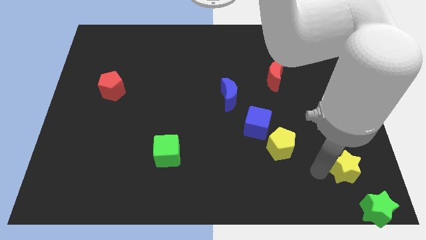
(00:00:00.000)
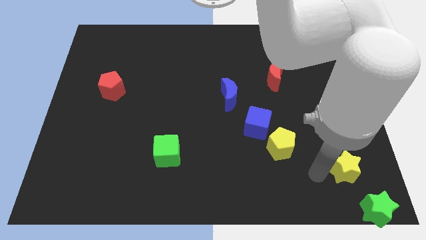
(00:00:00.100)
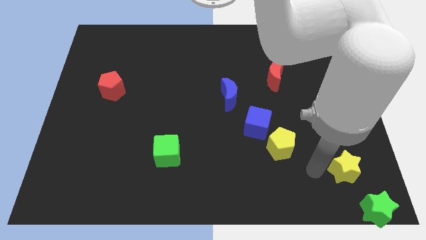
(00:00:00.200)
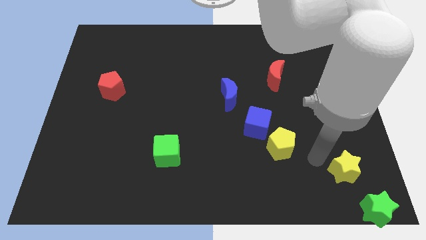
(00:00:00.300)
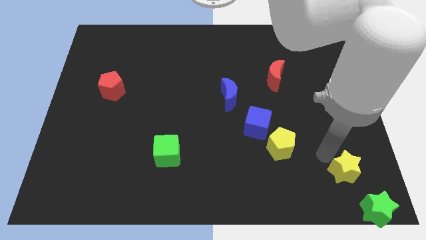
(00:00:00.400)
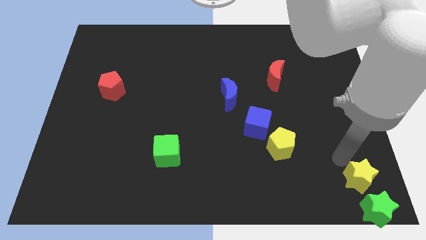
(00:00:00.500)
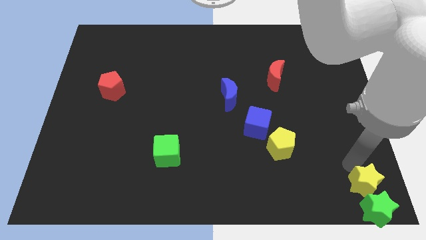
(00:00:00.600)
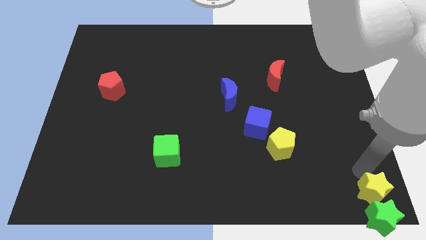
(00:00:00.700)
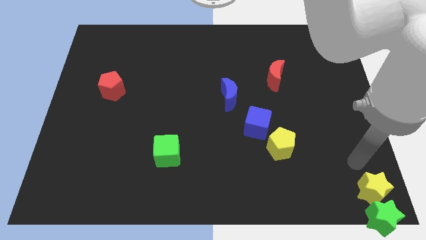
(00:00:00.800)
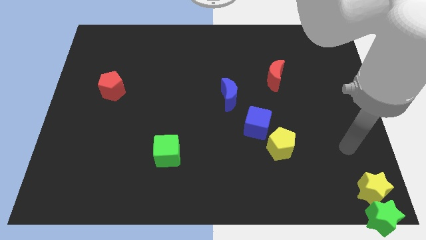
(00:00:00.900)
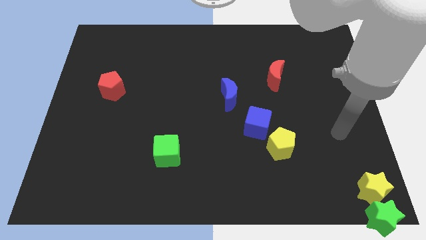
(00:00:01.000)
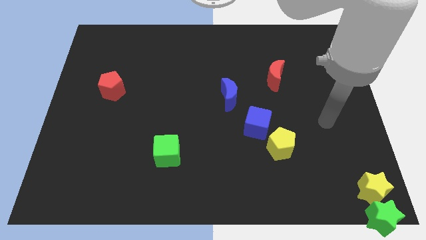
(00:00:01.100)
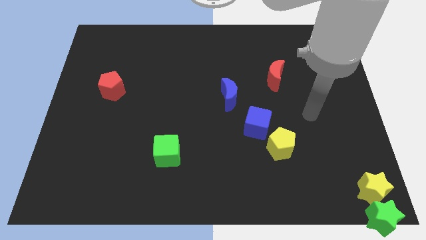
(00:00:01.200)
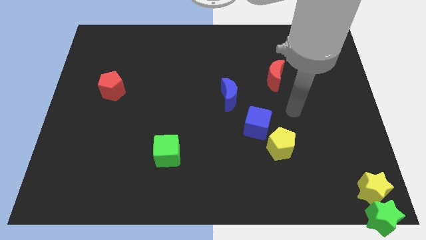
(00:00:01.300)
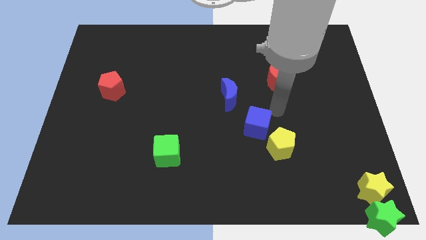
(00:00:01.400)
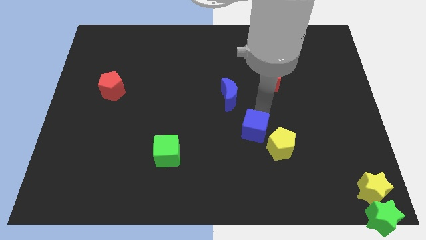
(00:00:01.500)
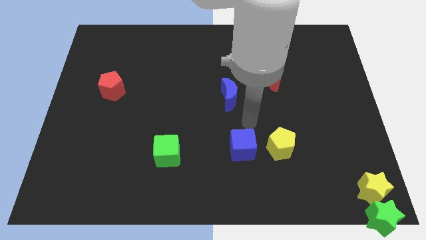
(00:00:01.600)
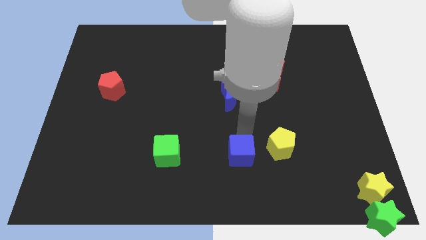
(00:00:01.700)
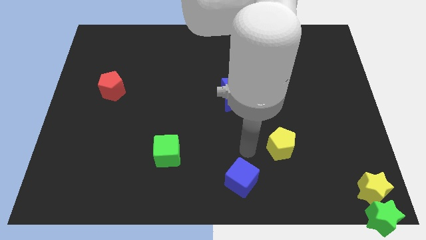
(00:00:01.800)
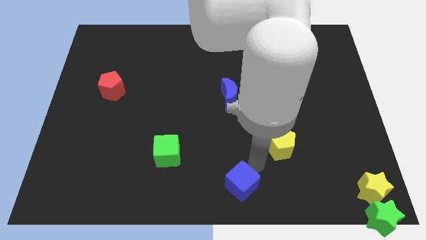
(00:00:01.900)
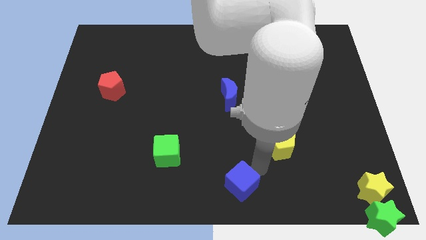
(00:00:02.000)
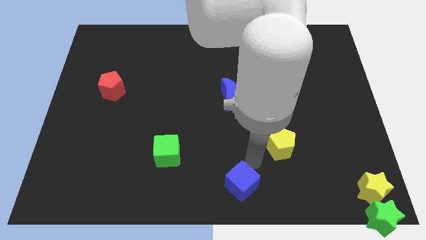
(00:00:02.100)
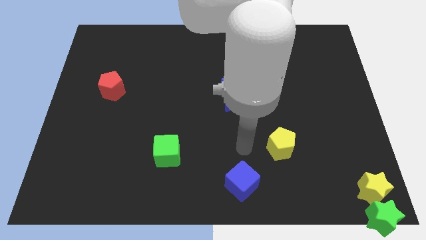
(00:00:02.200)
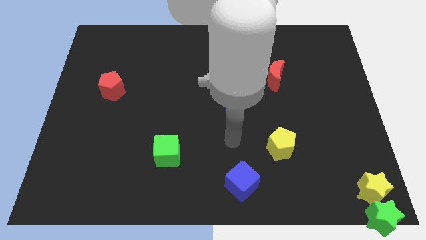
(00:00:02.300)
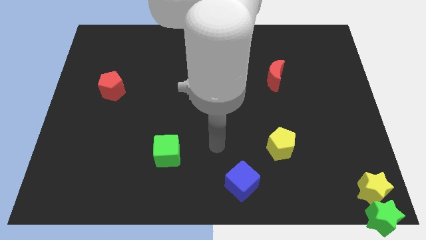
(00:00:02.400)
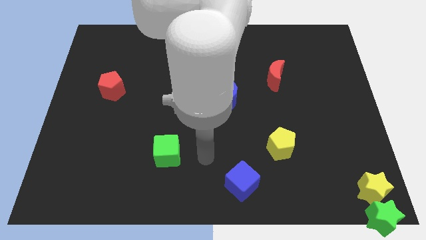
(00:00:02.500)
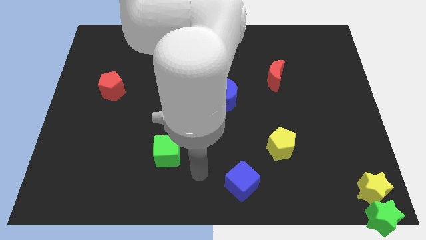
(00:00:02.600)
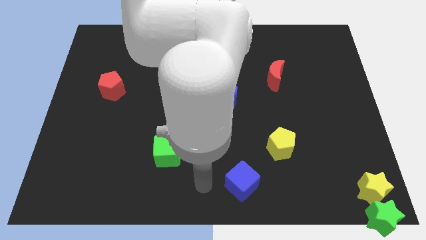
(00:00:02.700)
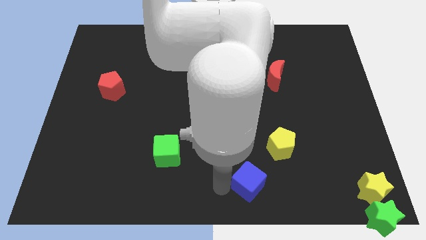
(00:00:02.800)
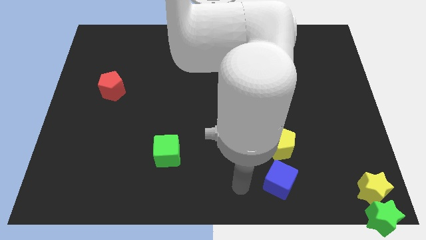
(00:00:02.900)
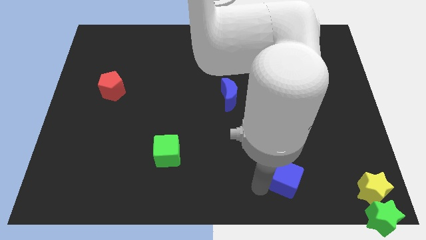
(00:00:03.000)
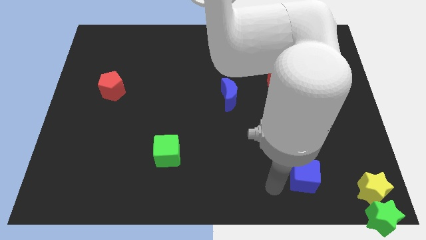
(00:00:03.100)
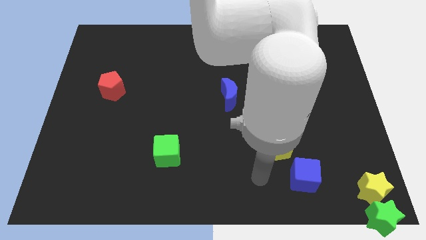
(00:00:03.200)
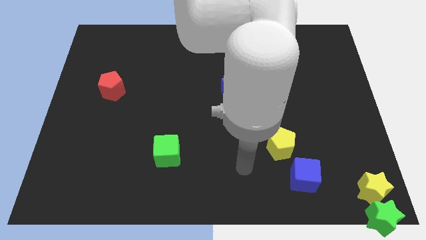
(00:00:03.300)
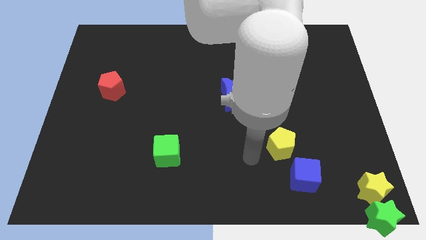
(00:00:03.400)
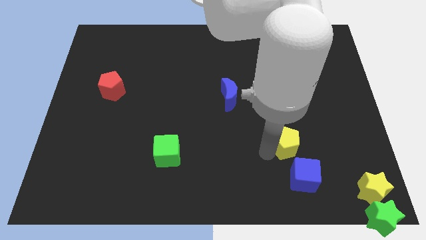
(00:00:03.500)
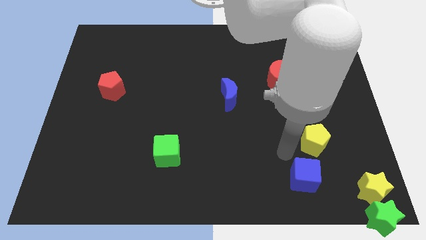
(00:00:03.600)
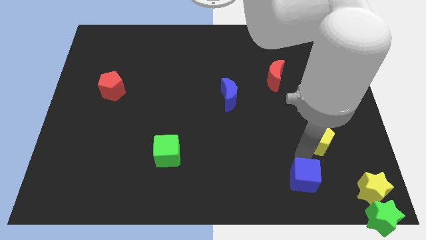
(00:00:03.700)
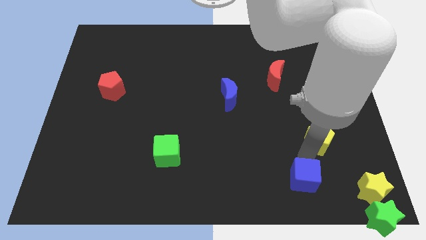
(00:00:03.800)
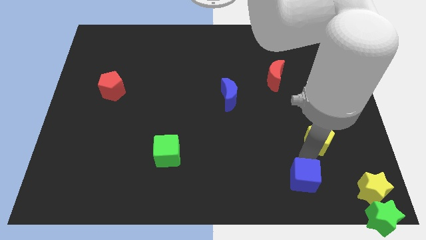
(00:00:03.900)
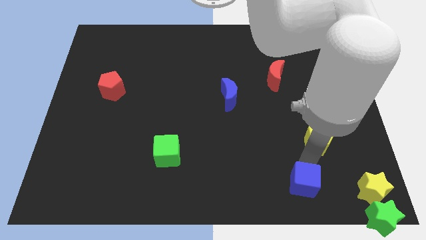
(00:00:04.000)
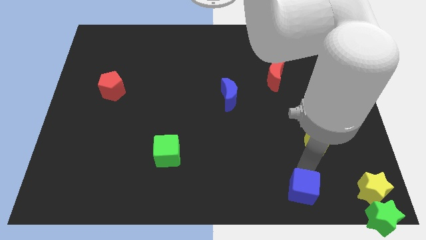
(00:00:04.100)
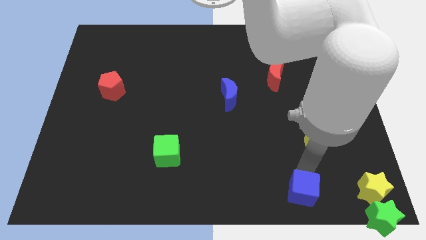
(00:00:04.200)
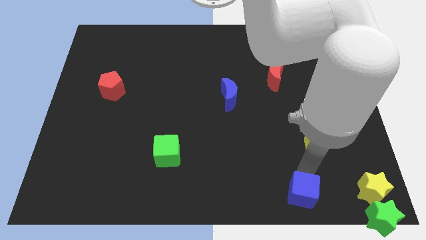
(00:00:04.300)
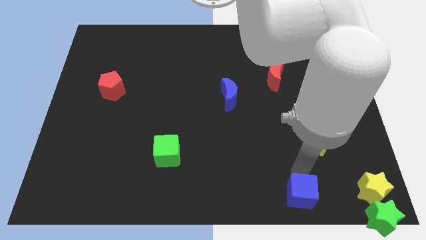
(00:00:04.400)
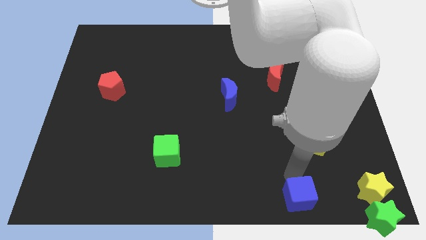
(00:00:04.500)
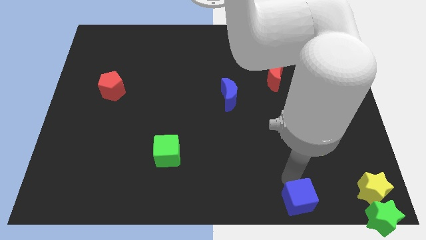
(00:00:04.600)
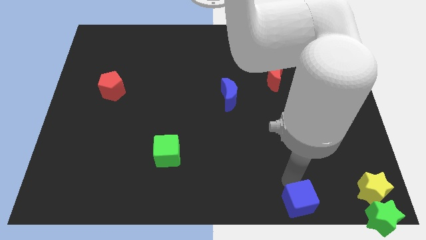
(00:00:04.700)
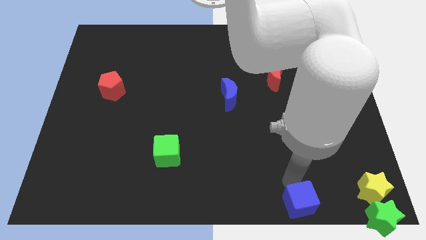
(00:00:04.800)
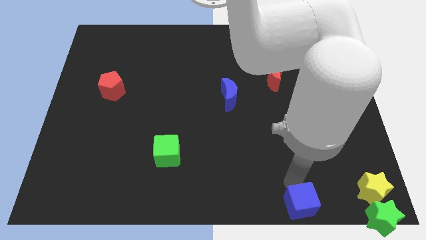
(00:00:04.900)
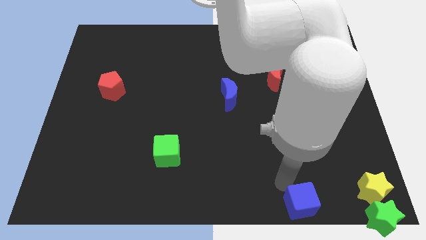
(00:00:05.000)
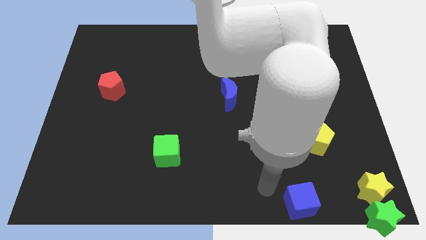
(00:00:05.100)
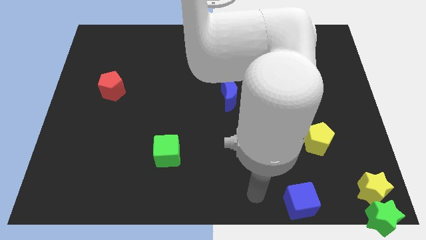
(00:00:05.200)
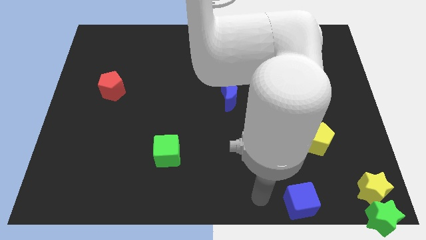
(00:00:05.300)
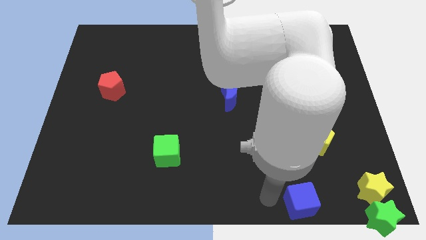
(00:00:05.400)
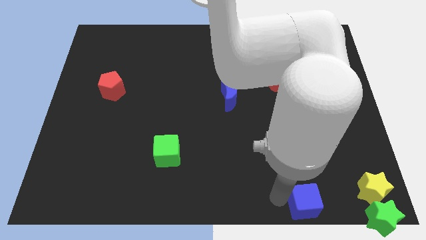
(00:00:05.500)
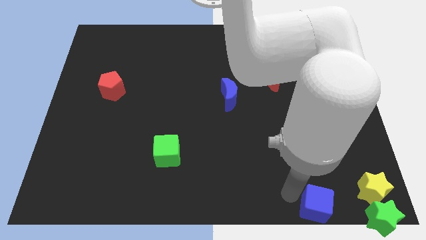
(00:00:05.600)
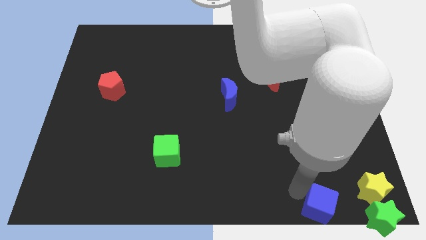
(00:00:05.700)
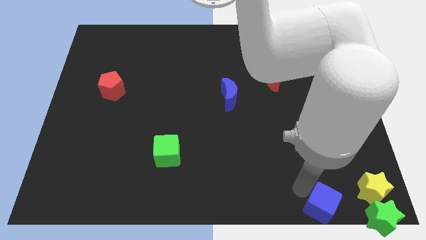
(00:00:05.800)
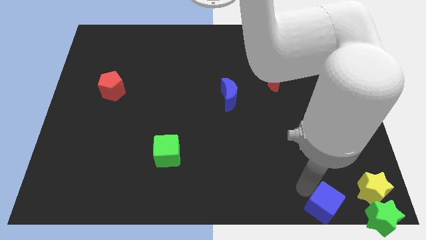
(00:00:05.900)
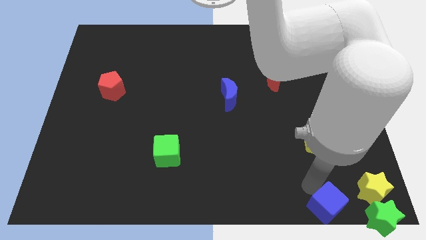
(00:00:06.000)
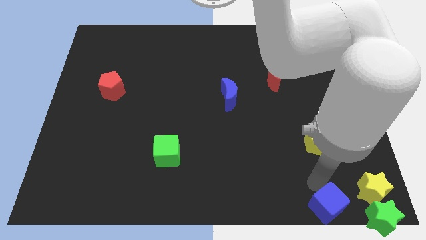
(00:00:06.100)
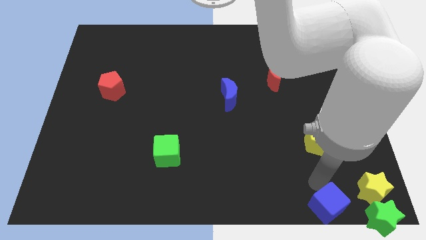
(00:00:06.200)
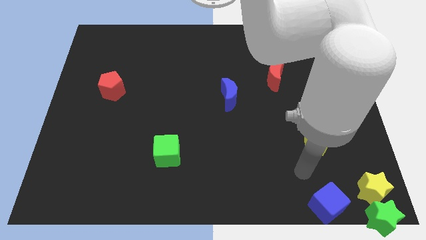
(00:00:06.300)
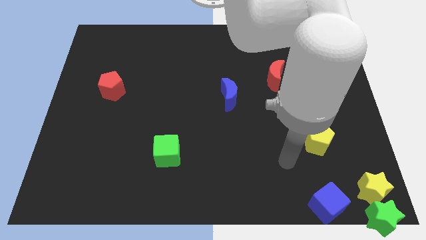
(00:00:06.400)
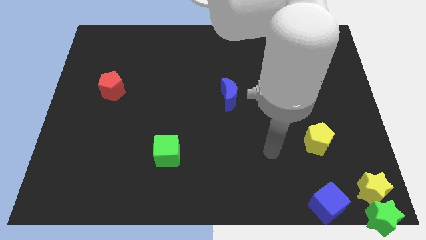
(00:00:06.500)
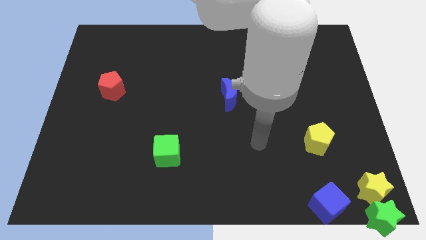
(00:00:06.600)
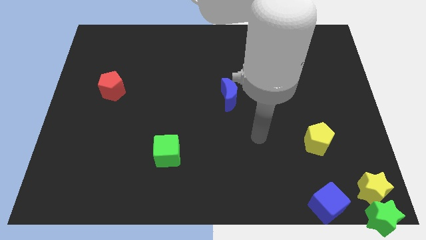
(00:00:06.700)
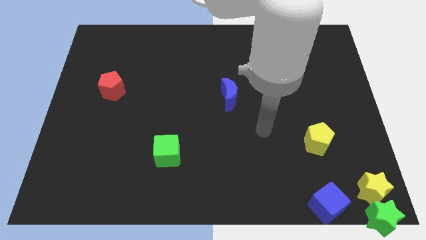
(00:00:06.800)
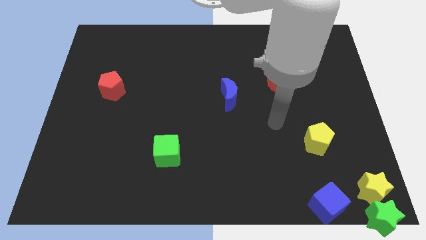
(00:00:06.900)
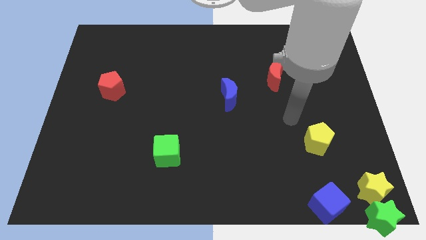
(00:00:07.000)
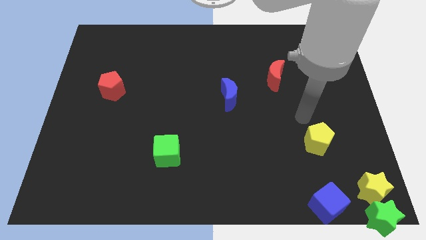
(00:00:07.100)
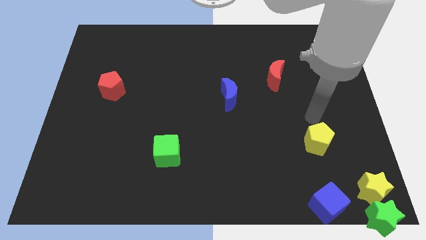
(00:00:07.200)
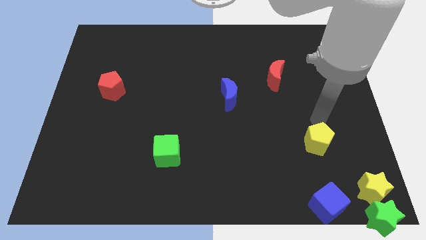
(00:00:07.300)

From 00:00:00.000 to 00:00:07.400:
push the blue cube towards bottom right side of the board

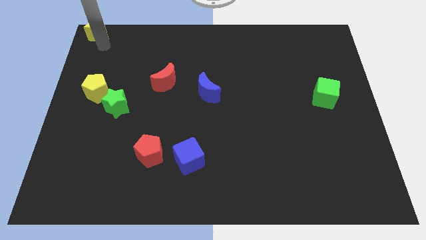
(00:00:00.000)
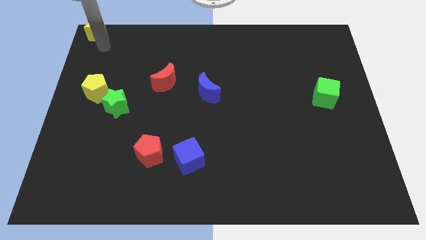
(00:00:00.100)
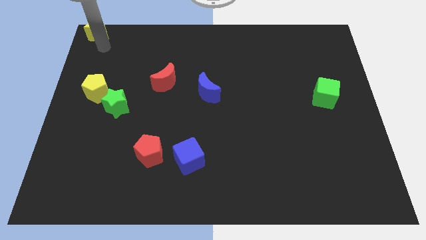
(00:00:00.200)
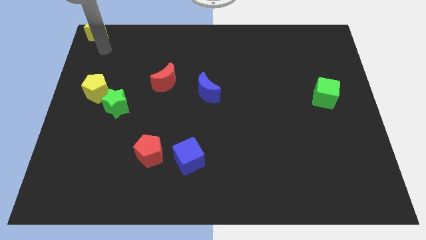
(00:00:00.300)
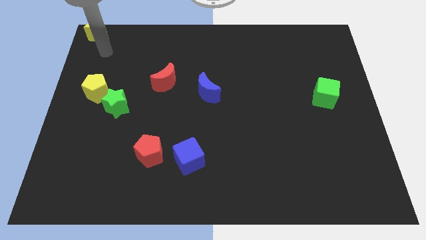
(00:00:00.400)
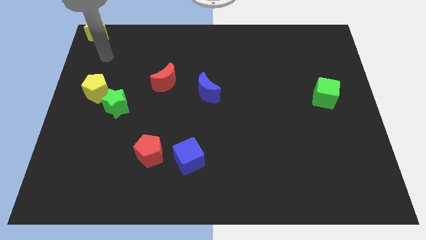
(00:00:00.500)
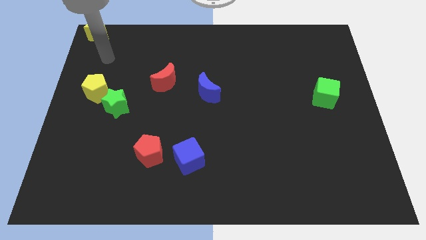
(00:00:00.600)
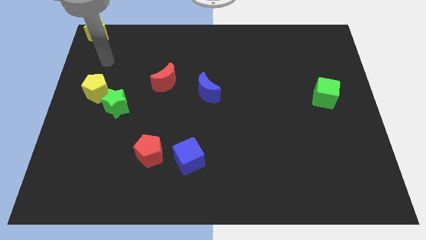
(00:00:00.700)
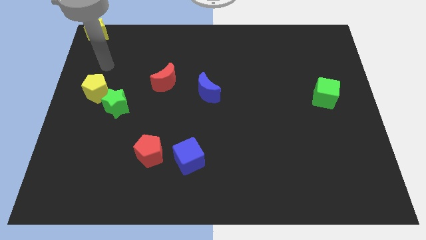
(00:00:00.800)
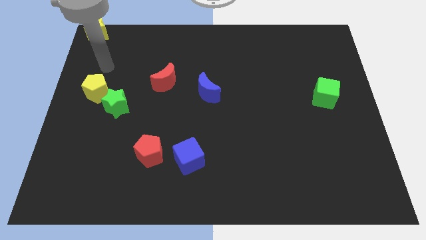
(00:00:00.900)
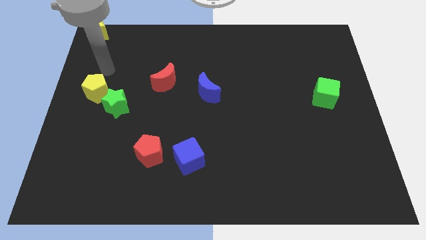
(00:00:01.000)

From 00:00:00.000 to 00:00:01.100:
move the arm away from the yellow star

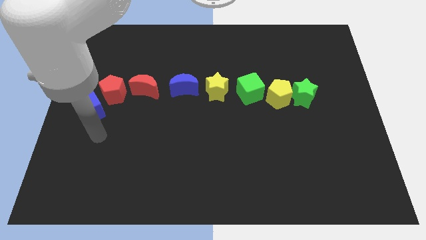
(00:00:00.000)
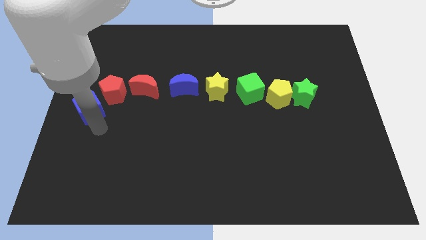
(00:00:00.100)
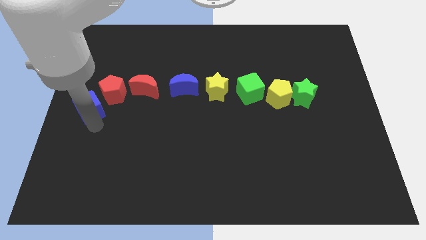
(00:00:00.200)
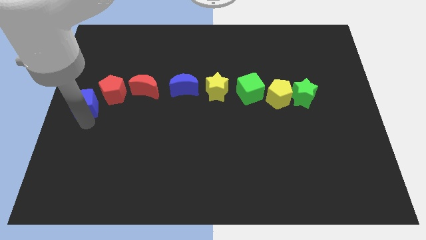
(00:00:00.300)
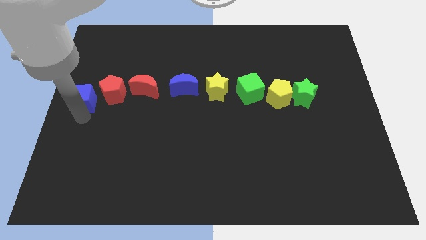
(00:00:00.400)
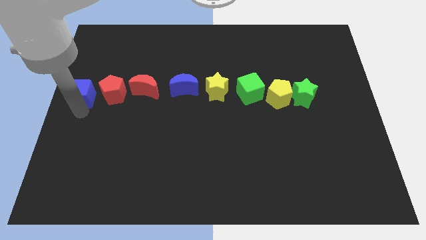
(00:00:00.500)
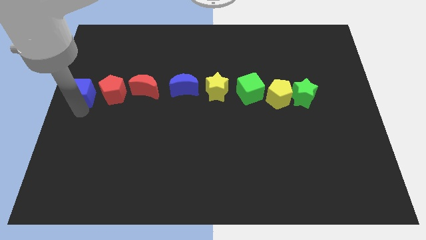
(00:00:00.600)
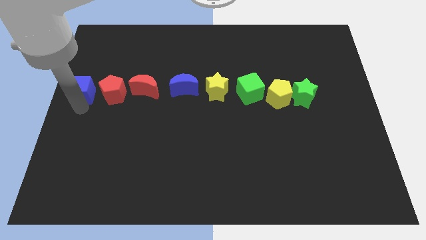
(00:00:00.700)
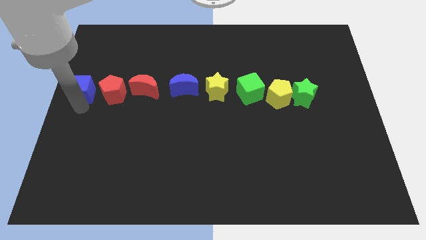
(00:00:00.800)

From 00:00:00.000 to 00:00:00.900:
place the blue cube left to red pentagon
